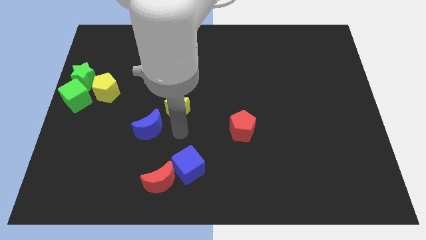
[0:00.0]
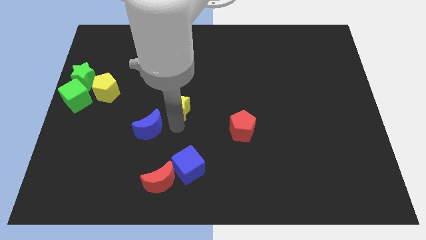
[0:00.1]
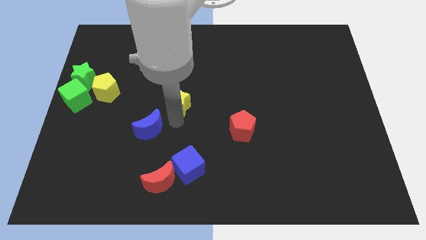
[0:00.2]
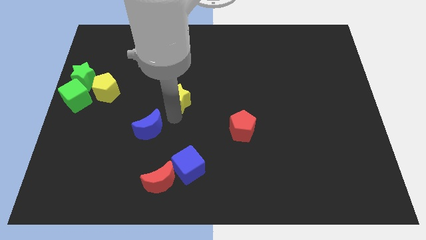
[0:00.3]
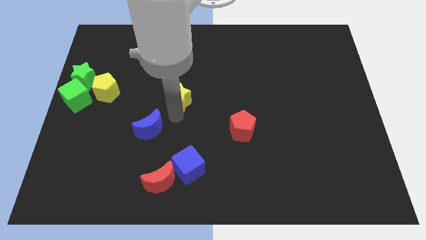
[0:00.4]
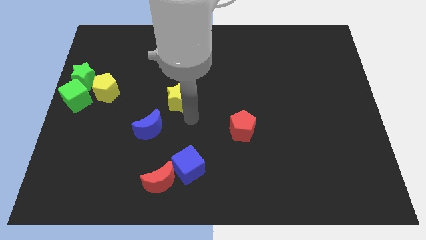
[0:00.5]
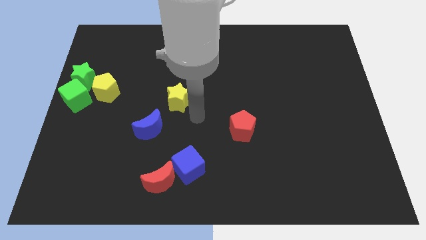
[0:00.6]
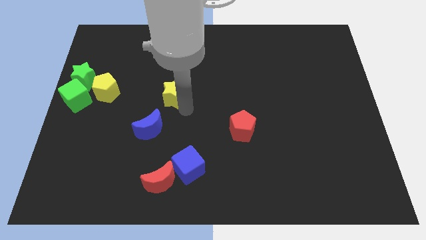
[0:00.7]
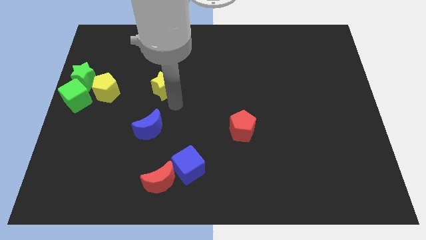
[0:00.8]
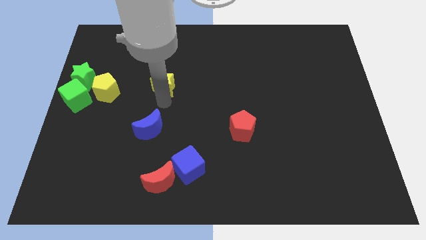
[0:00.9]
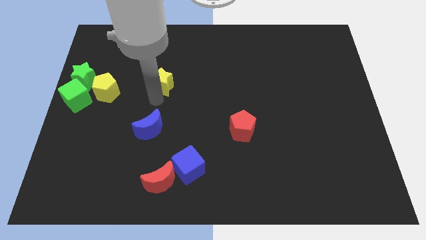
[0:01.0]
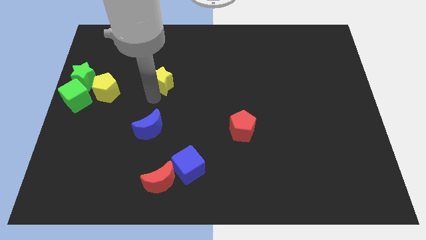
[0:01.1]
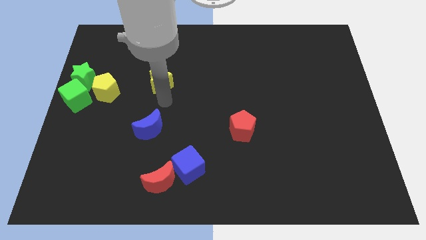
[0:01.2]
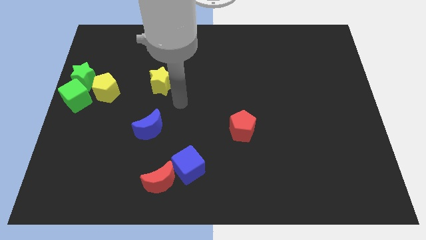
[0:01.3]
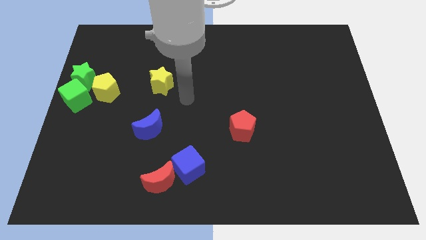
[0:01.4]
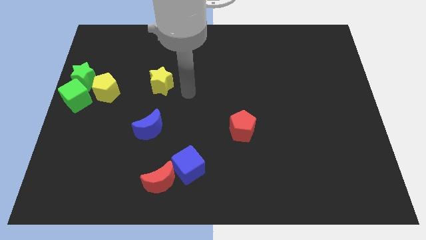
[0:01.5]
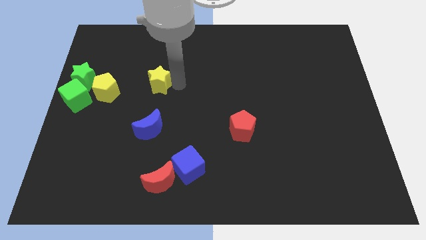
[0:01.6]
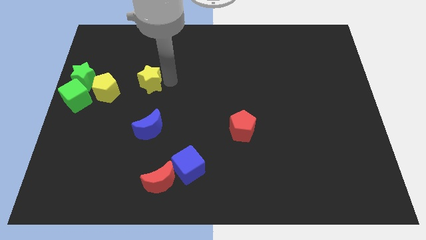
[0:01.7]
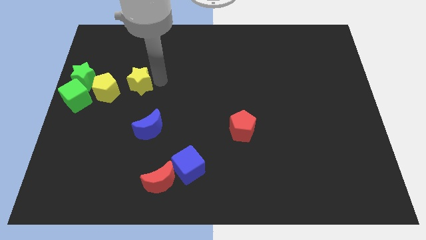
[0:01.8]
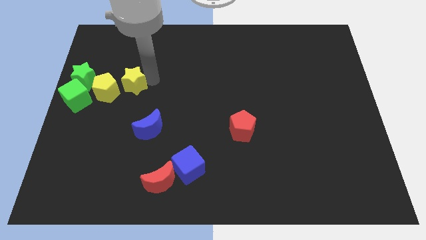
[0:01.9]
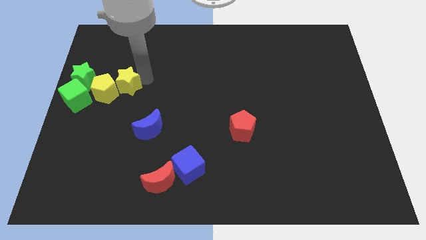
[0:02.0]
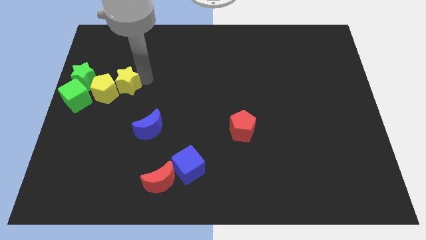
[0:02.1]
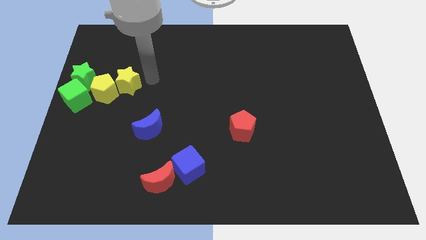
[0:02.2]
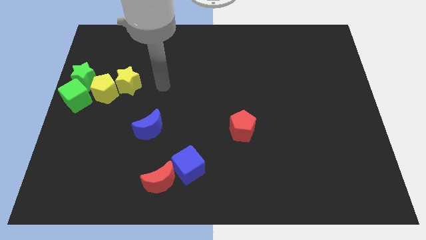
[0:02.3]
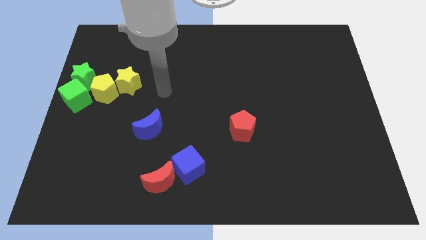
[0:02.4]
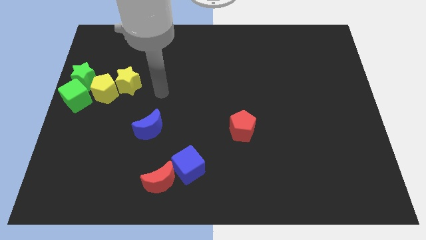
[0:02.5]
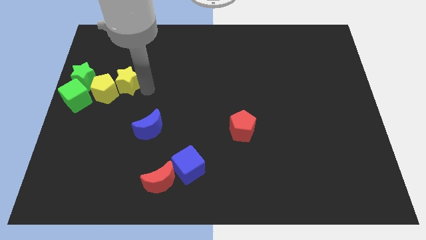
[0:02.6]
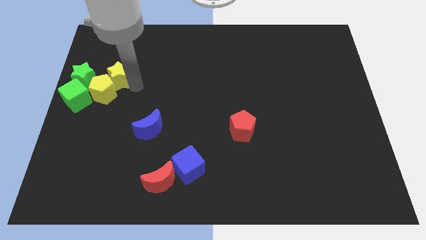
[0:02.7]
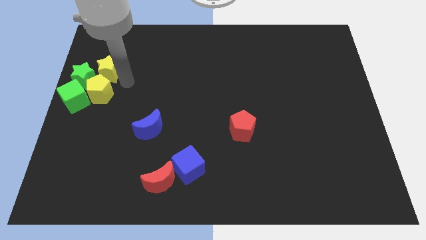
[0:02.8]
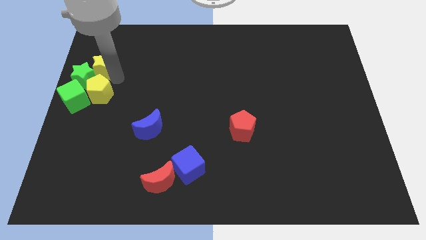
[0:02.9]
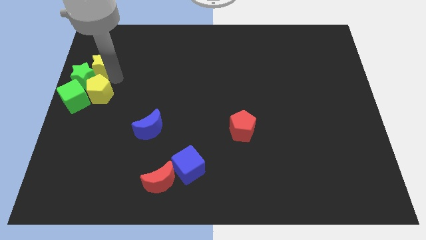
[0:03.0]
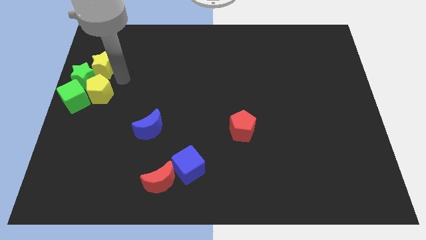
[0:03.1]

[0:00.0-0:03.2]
plac yellow star to the top of yellow pentagon

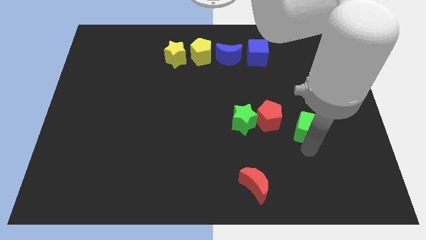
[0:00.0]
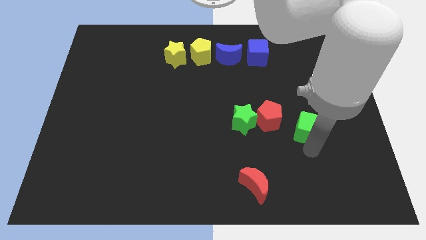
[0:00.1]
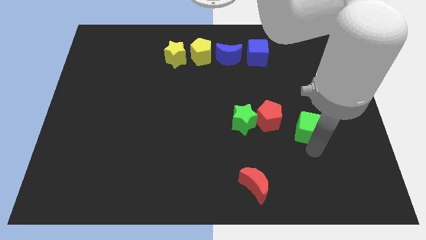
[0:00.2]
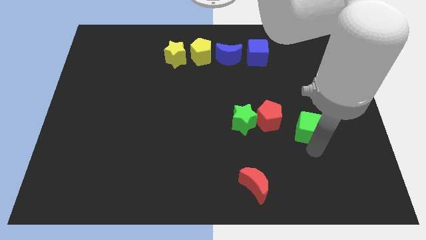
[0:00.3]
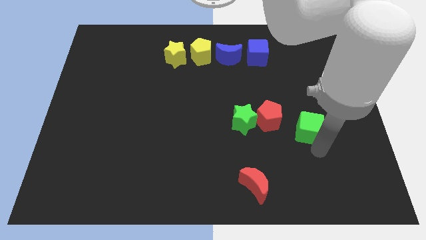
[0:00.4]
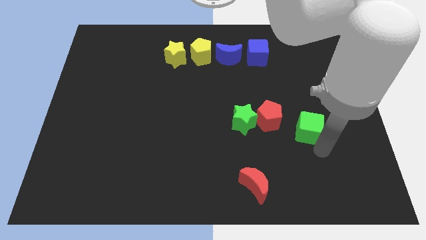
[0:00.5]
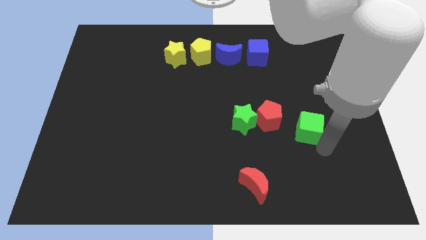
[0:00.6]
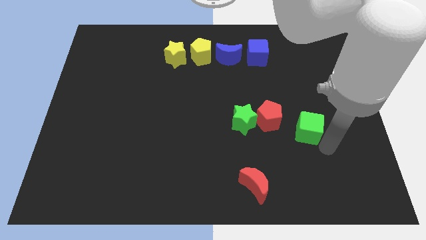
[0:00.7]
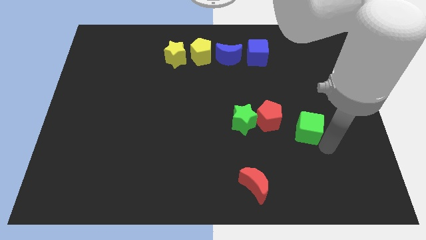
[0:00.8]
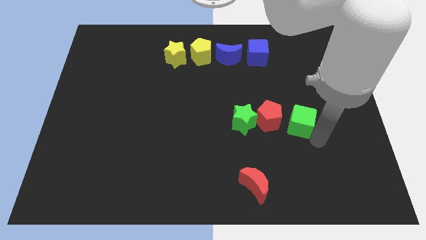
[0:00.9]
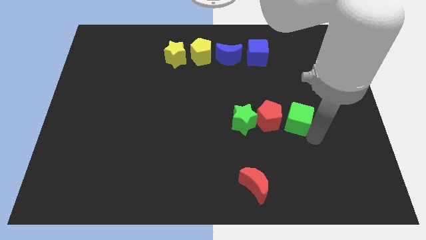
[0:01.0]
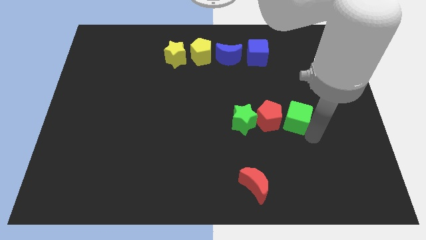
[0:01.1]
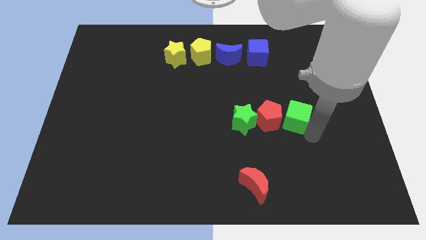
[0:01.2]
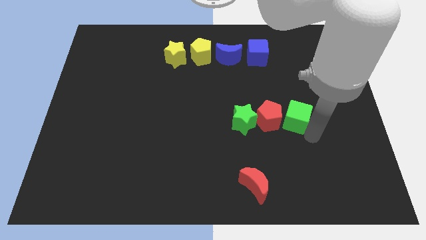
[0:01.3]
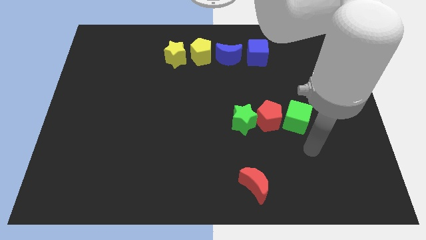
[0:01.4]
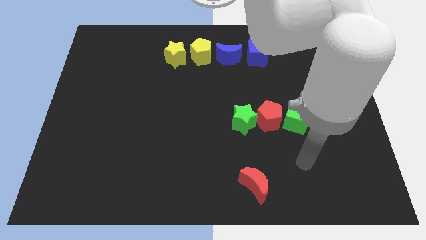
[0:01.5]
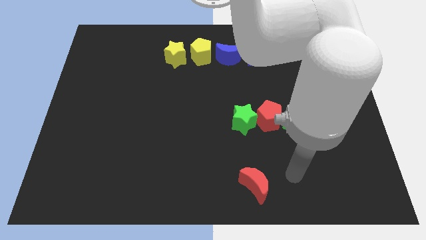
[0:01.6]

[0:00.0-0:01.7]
place the green cube right to the red pentagon

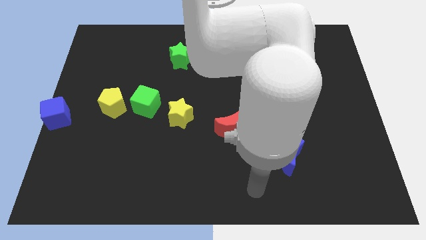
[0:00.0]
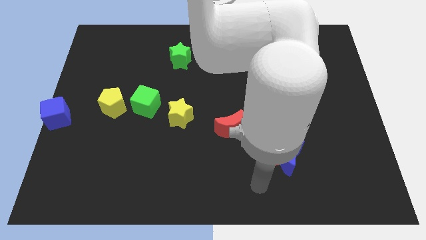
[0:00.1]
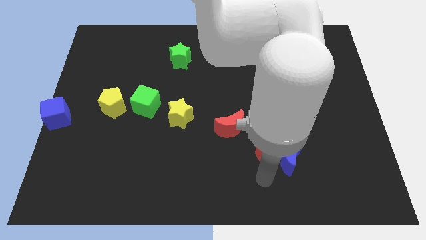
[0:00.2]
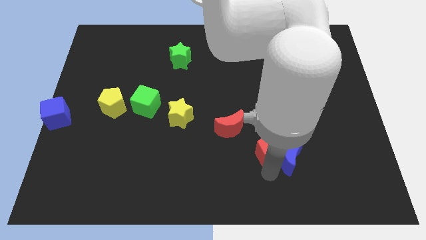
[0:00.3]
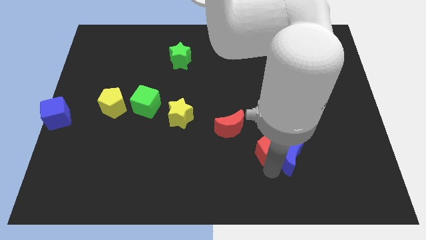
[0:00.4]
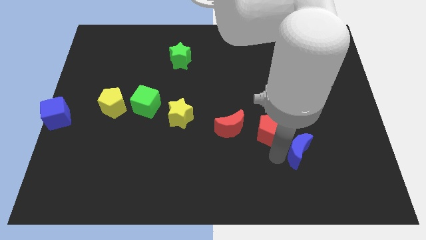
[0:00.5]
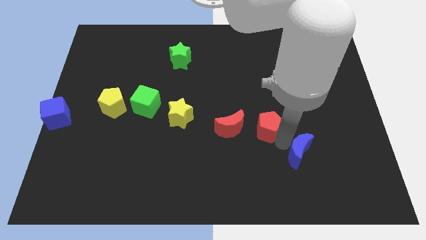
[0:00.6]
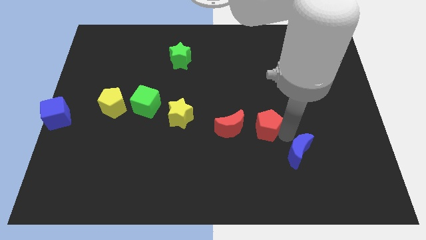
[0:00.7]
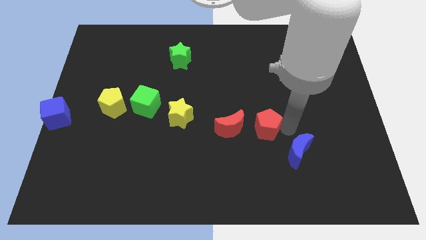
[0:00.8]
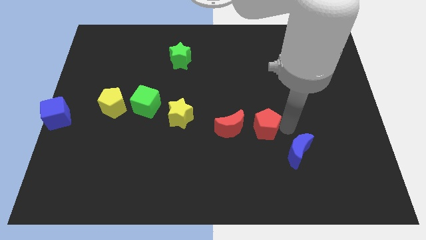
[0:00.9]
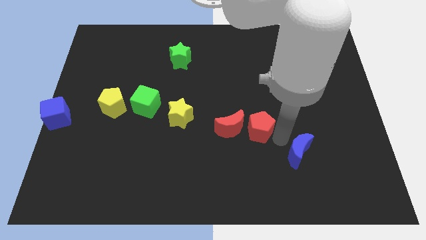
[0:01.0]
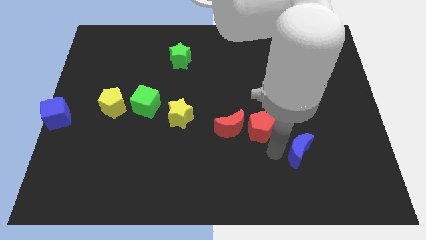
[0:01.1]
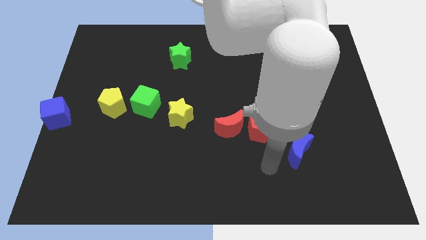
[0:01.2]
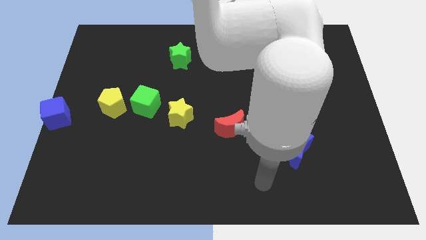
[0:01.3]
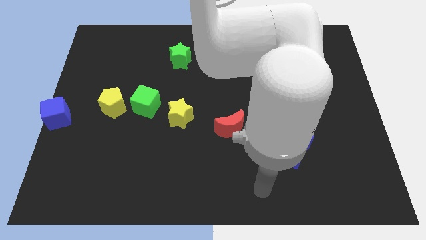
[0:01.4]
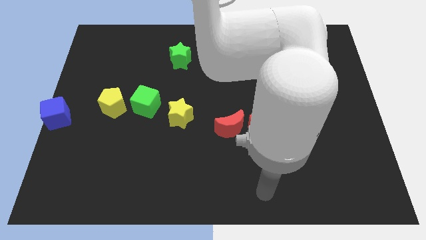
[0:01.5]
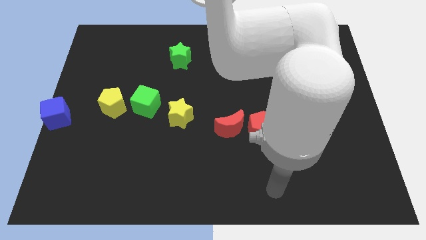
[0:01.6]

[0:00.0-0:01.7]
separate red pentagon from blue crescent

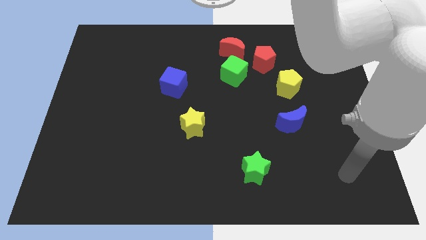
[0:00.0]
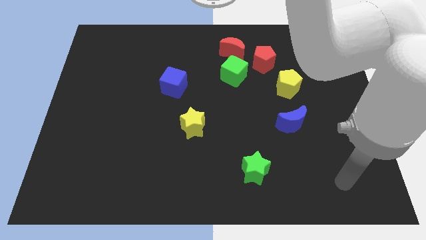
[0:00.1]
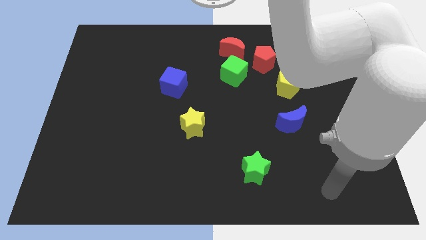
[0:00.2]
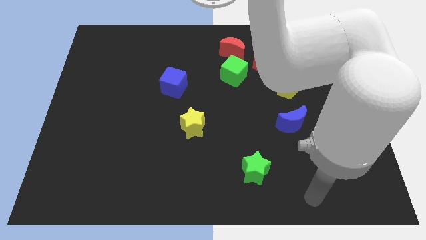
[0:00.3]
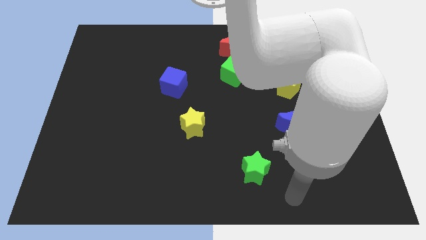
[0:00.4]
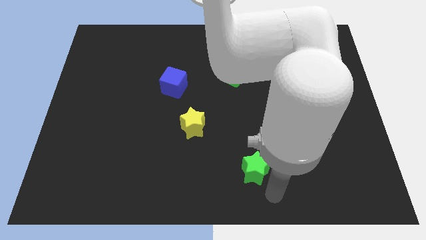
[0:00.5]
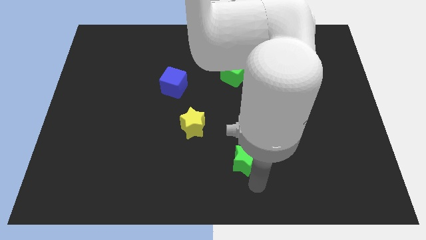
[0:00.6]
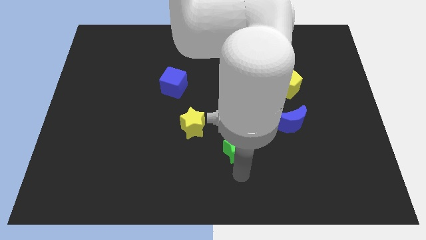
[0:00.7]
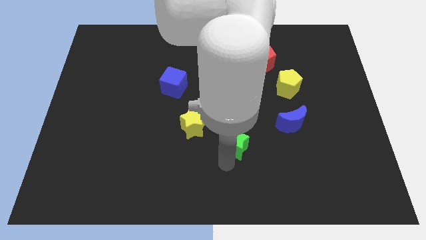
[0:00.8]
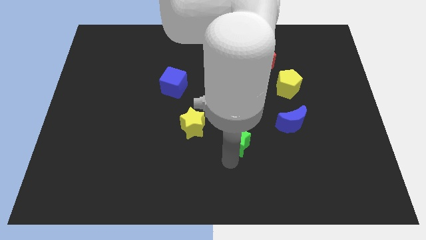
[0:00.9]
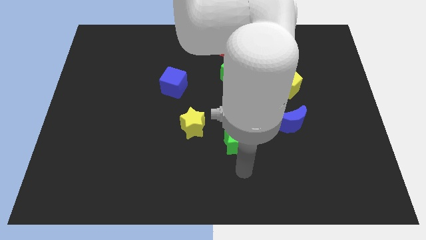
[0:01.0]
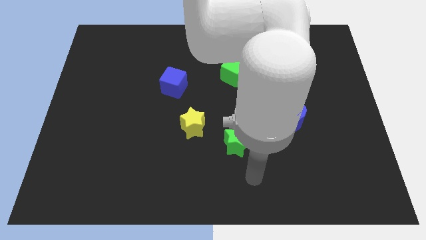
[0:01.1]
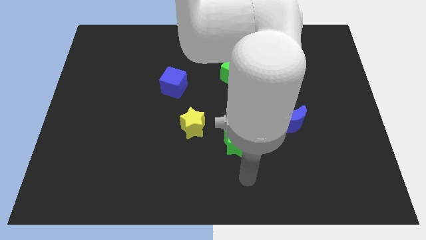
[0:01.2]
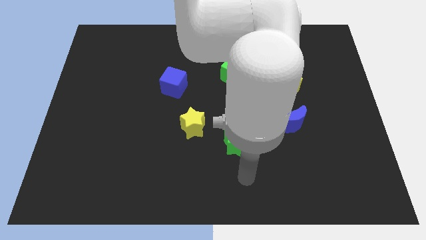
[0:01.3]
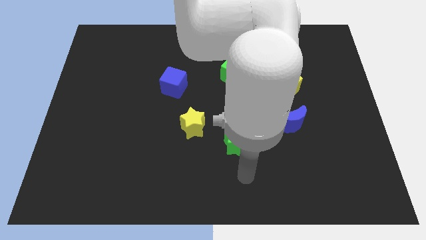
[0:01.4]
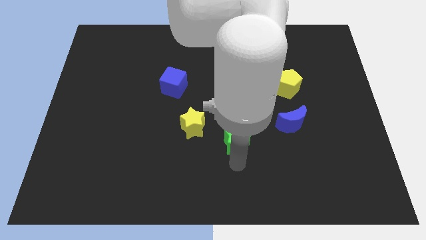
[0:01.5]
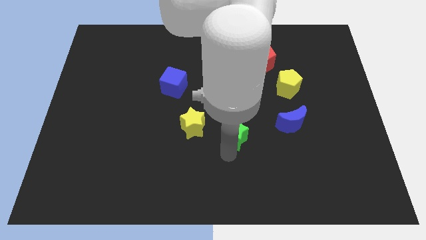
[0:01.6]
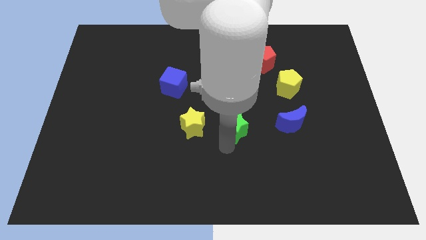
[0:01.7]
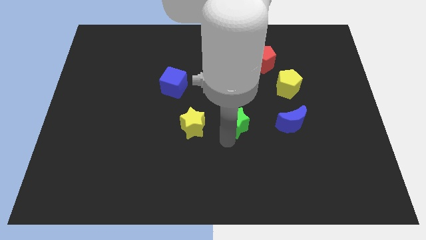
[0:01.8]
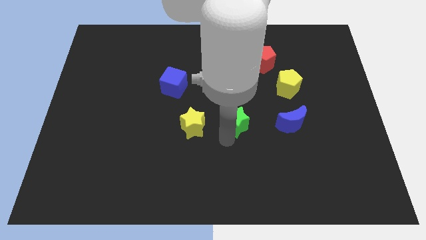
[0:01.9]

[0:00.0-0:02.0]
push the green star to the right of the yellow star

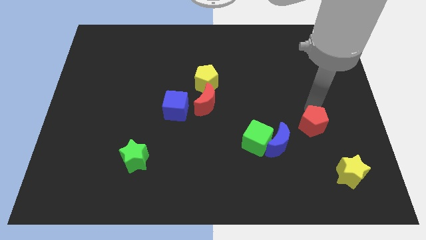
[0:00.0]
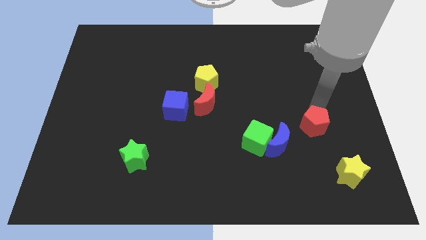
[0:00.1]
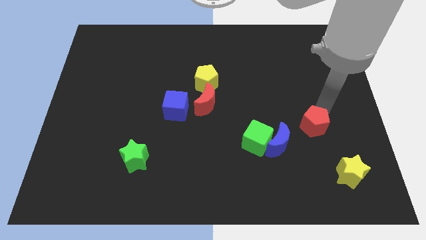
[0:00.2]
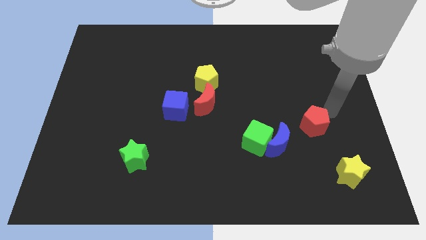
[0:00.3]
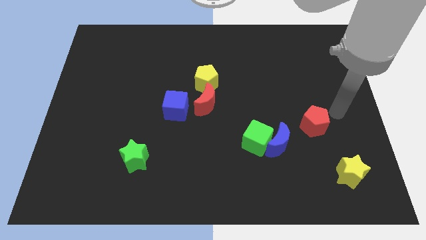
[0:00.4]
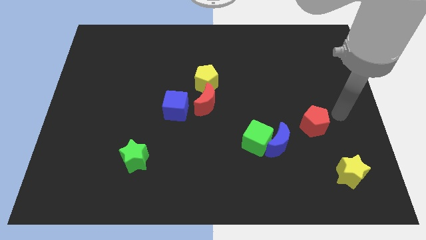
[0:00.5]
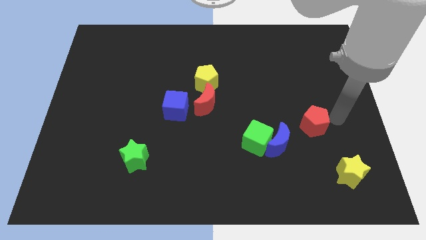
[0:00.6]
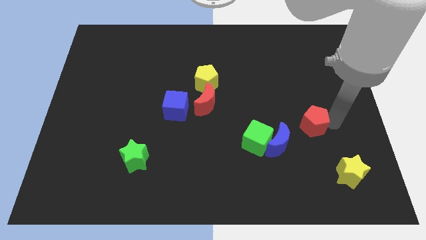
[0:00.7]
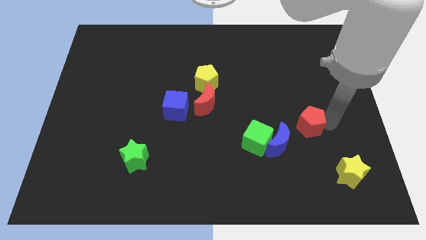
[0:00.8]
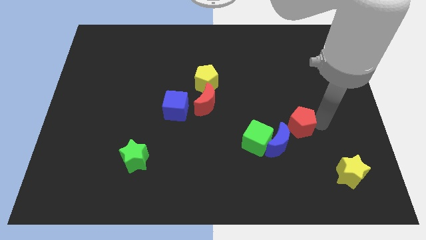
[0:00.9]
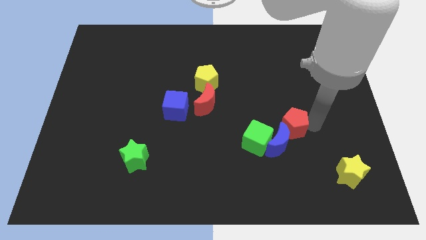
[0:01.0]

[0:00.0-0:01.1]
slide red pentagon into blue moon
